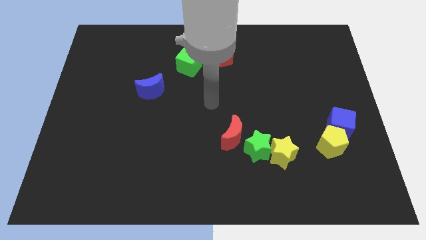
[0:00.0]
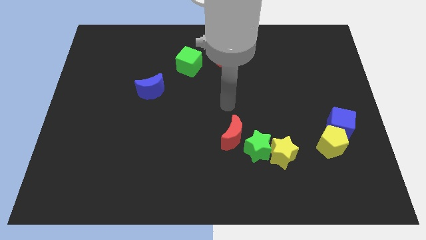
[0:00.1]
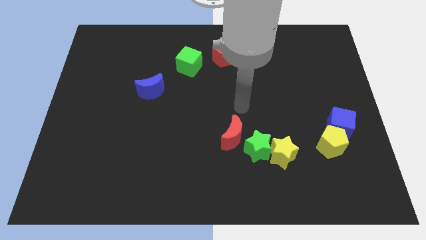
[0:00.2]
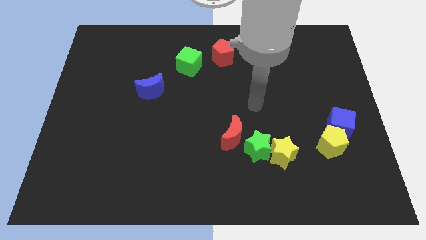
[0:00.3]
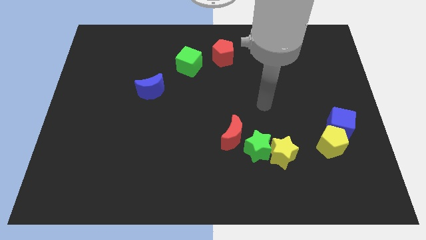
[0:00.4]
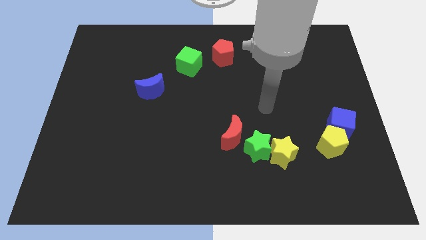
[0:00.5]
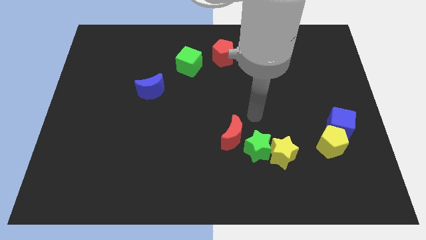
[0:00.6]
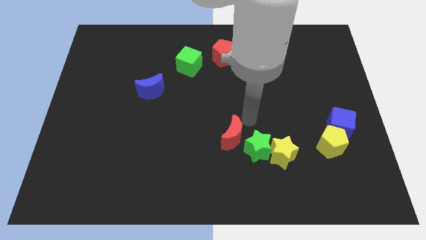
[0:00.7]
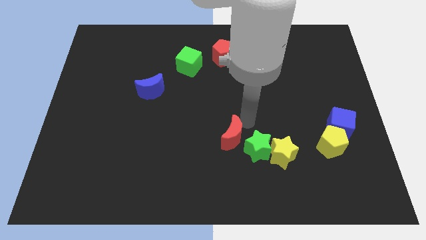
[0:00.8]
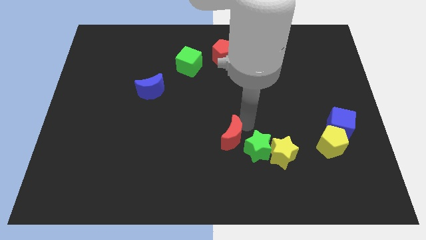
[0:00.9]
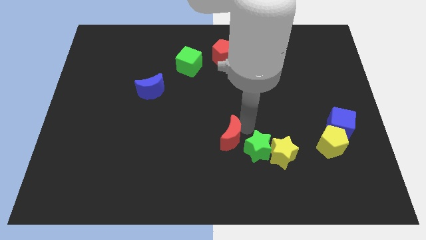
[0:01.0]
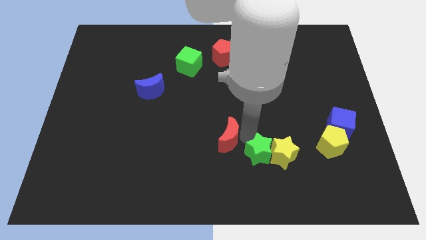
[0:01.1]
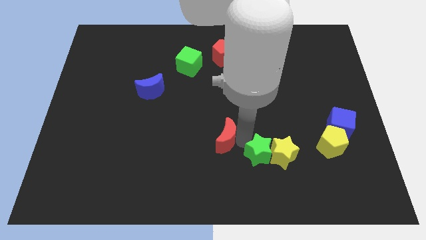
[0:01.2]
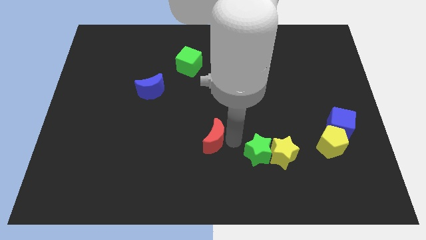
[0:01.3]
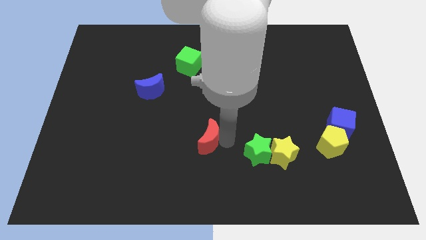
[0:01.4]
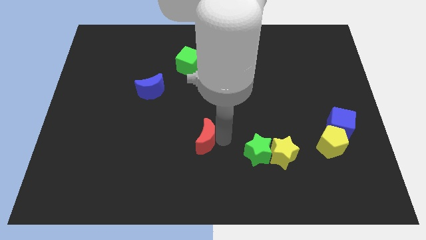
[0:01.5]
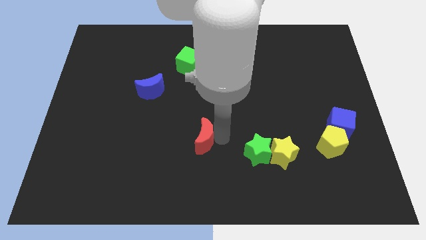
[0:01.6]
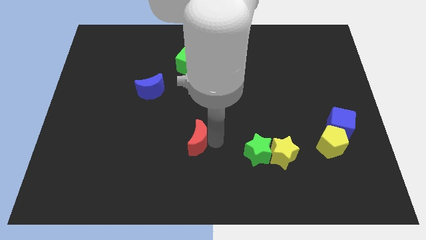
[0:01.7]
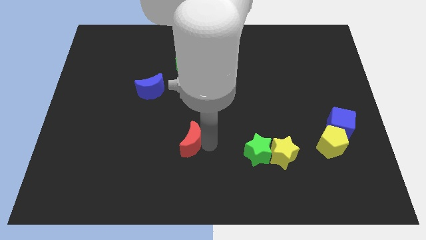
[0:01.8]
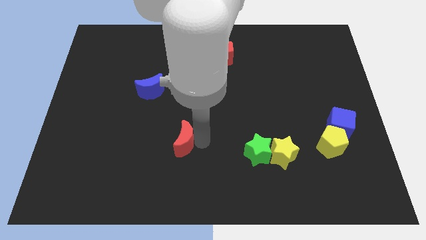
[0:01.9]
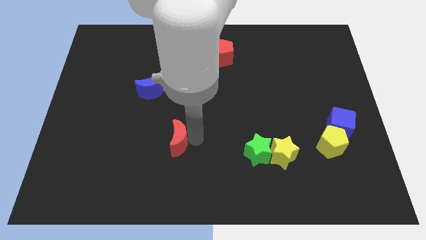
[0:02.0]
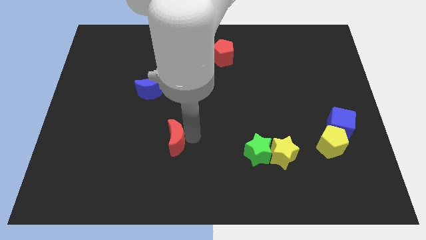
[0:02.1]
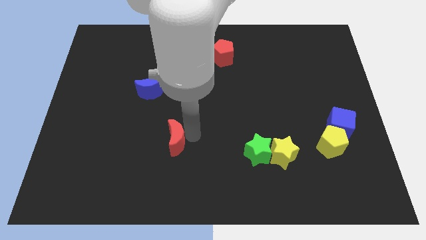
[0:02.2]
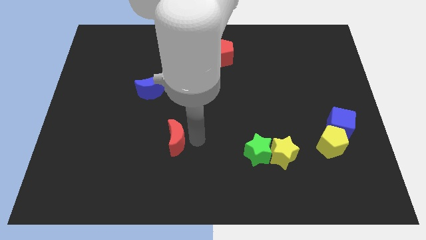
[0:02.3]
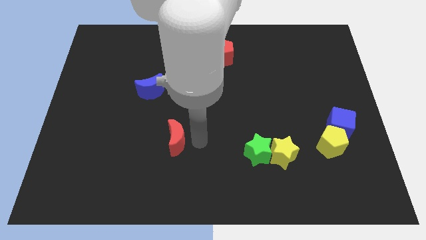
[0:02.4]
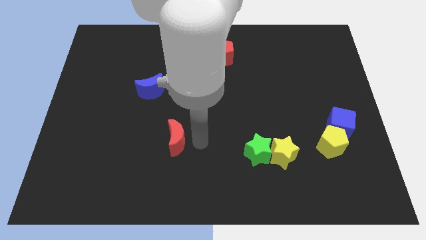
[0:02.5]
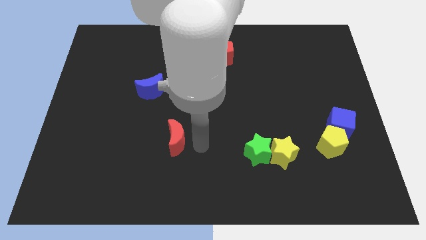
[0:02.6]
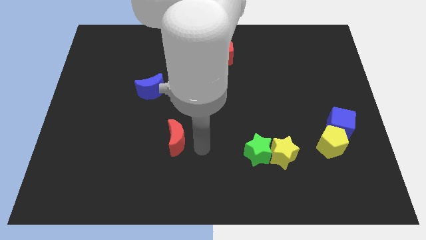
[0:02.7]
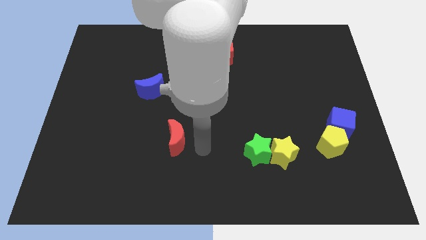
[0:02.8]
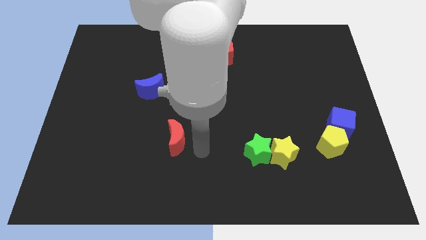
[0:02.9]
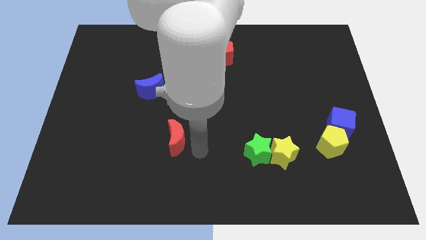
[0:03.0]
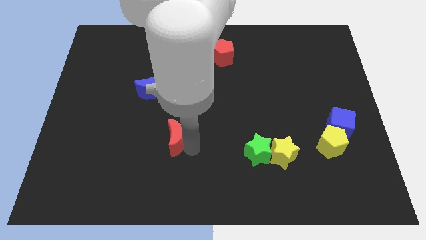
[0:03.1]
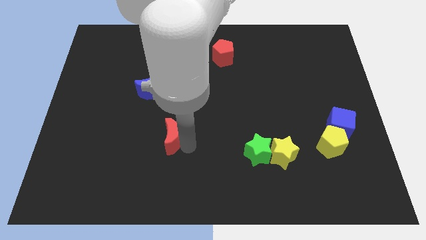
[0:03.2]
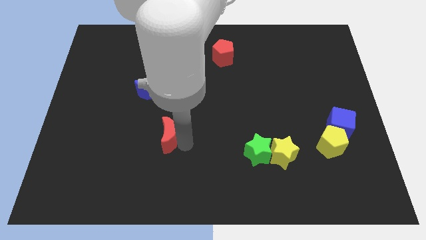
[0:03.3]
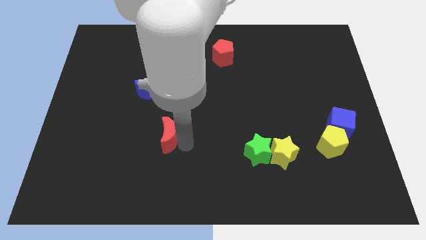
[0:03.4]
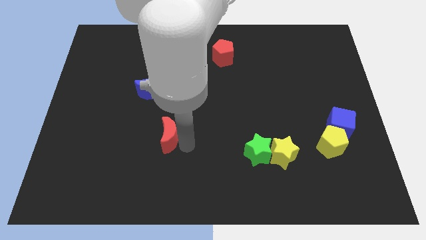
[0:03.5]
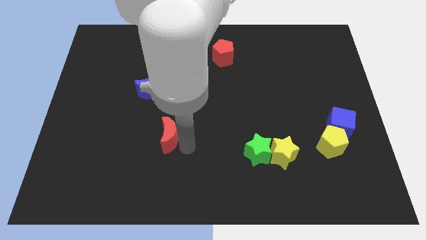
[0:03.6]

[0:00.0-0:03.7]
move the red moon towards left side of the board

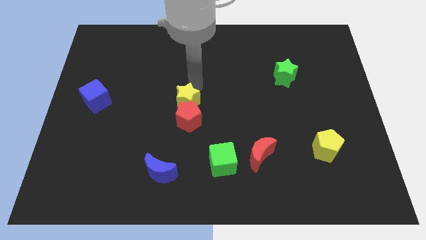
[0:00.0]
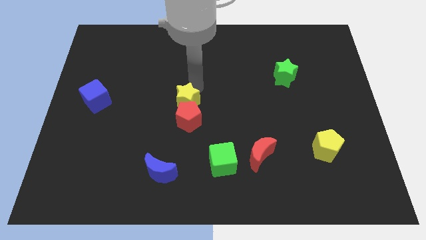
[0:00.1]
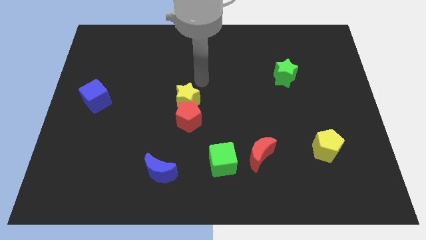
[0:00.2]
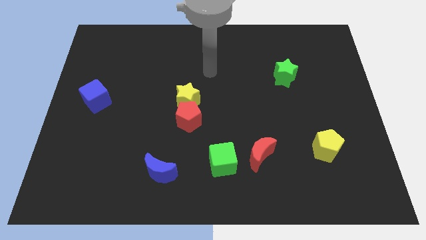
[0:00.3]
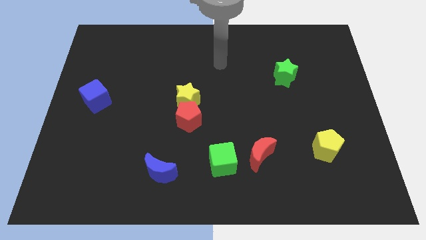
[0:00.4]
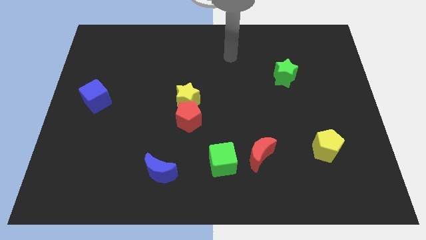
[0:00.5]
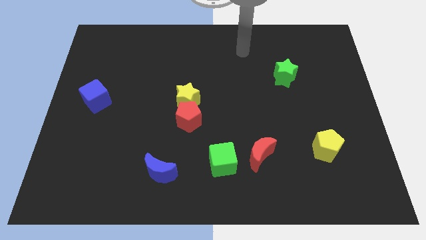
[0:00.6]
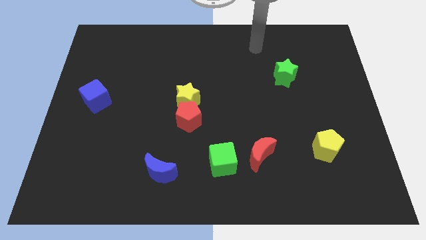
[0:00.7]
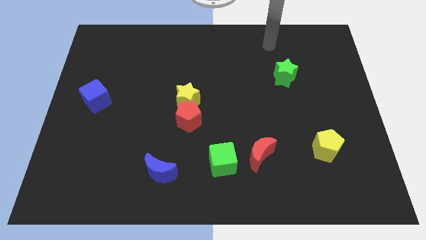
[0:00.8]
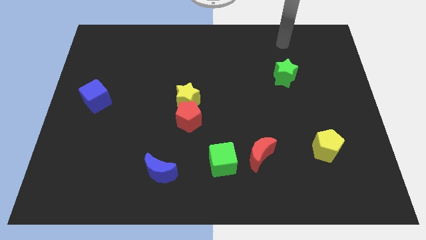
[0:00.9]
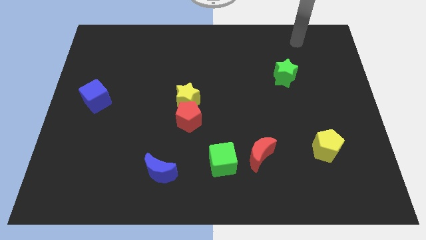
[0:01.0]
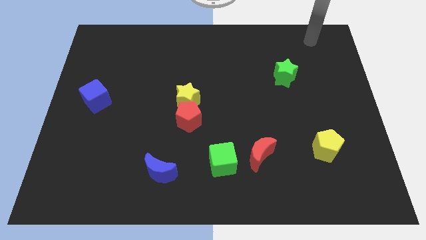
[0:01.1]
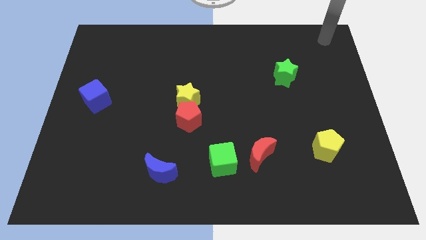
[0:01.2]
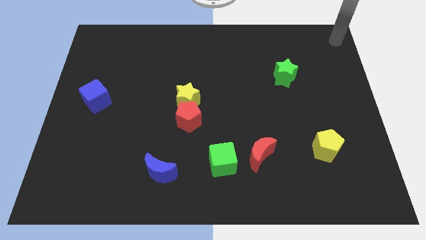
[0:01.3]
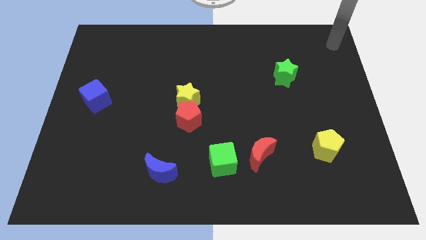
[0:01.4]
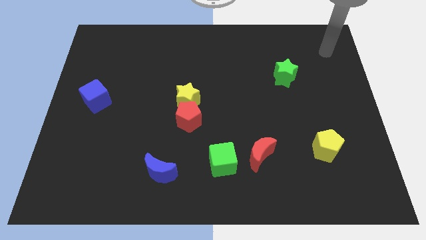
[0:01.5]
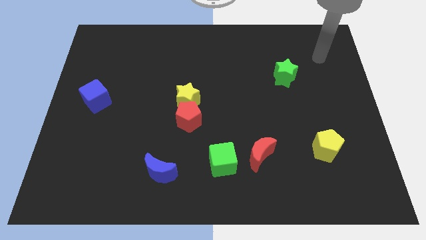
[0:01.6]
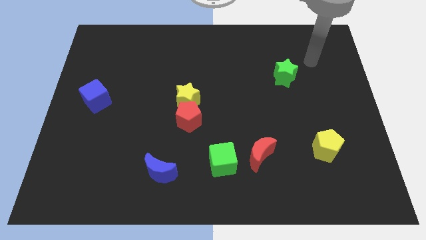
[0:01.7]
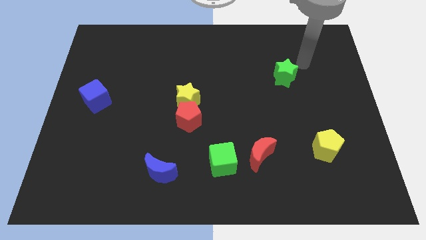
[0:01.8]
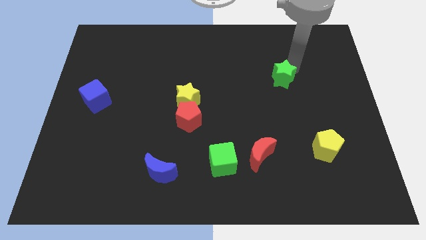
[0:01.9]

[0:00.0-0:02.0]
move your arm towards the green star

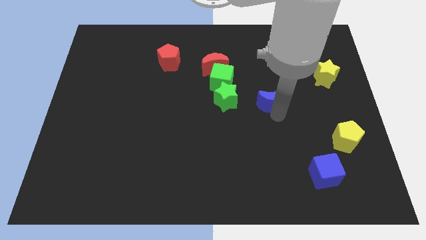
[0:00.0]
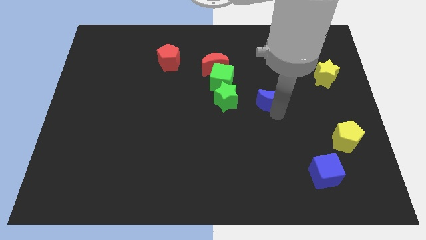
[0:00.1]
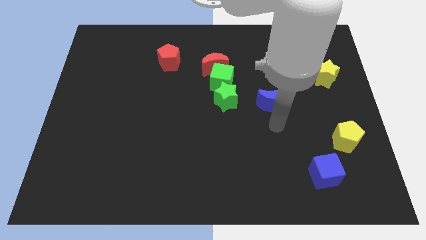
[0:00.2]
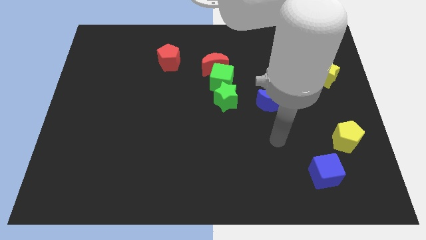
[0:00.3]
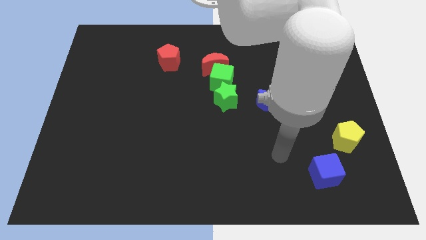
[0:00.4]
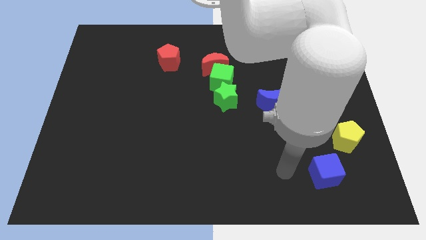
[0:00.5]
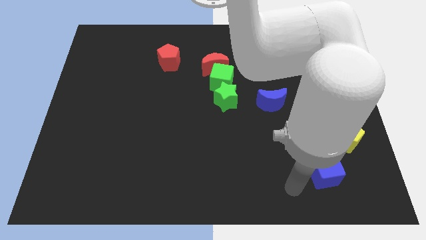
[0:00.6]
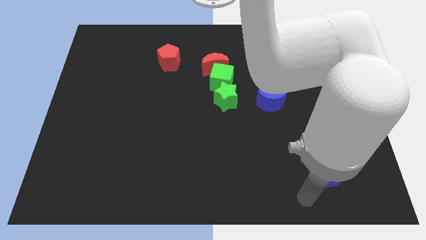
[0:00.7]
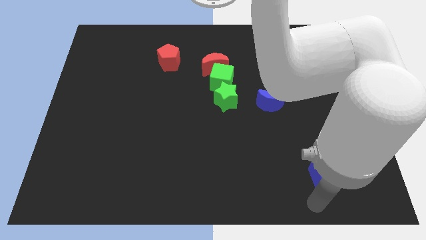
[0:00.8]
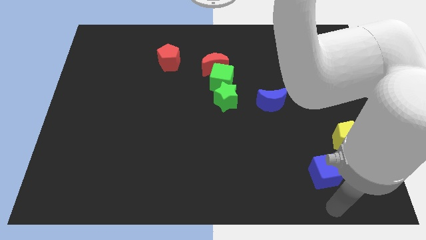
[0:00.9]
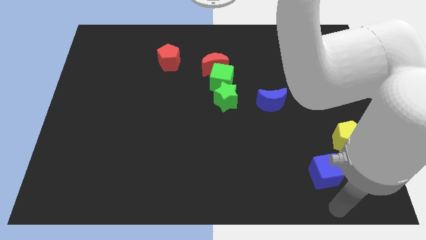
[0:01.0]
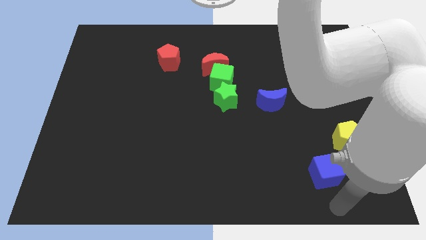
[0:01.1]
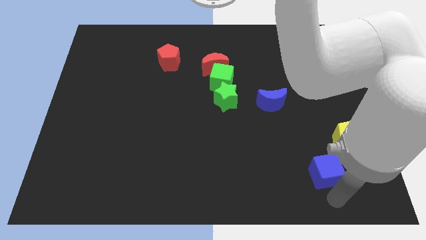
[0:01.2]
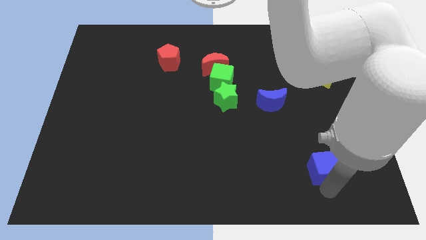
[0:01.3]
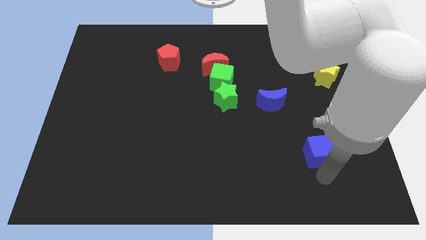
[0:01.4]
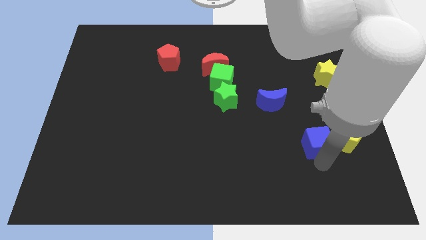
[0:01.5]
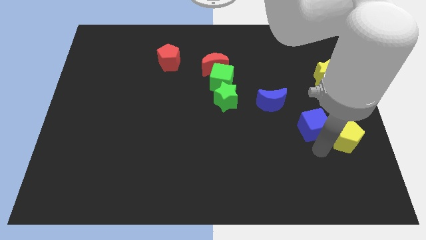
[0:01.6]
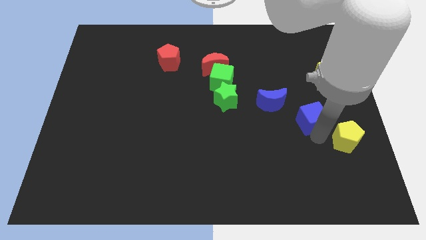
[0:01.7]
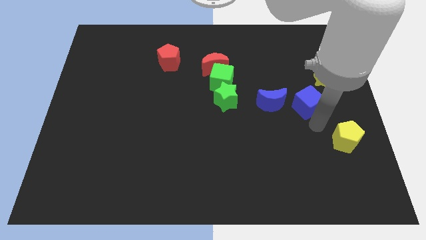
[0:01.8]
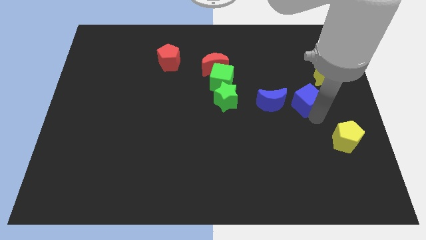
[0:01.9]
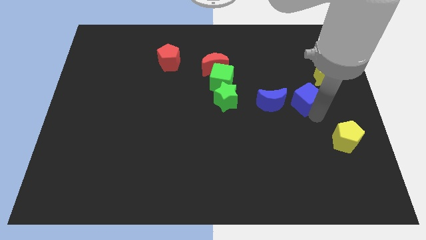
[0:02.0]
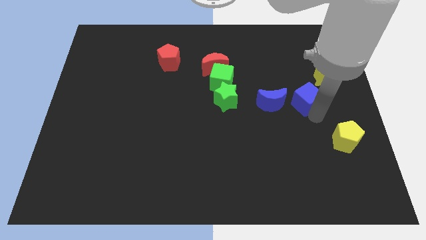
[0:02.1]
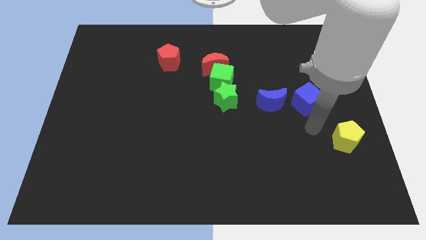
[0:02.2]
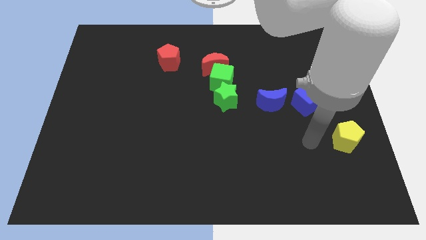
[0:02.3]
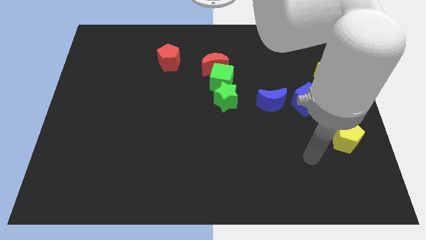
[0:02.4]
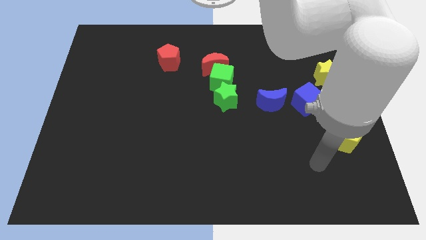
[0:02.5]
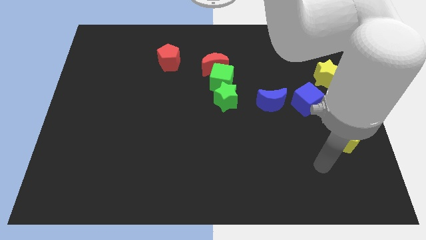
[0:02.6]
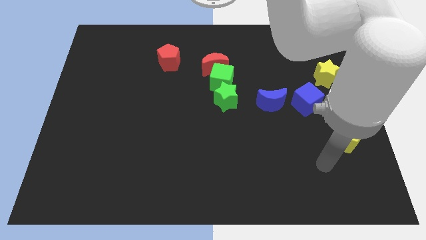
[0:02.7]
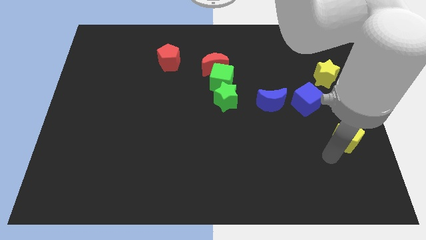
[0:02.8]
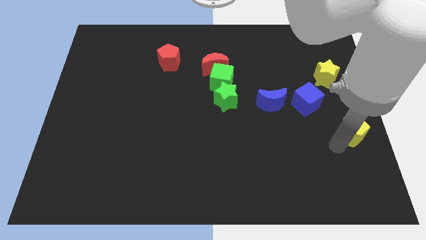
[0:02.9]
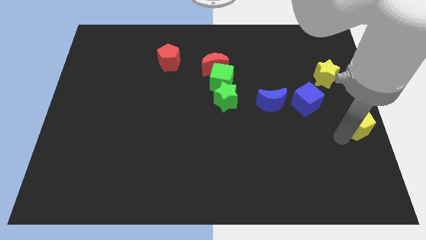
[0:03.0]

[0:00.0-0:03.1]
push the blue cube to the right of the blue moon

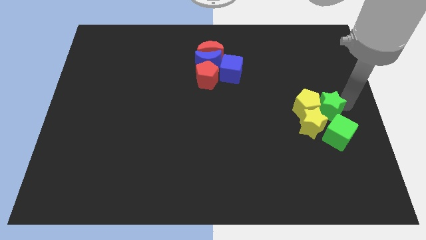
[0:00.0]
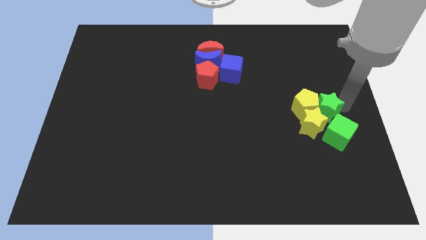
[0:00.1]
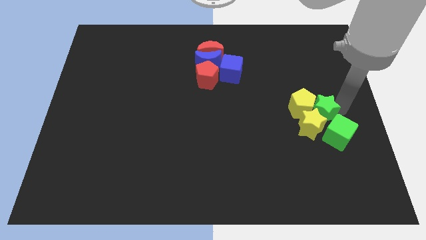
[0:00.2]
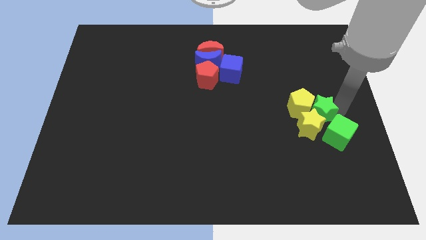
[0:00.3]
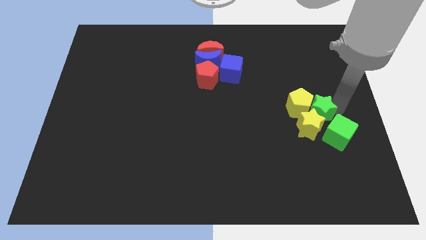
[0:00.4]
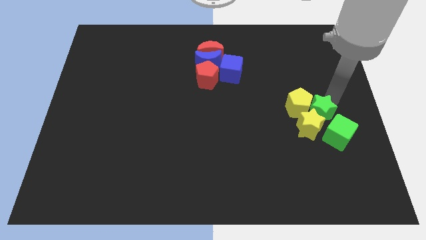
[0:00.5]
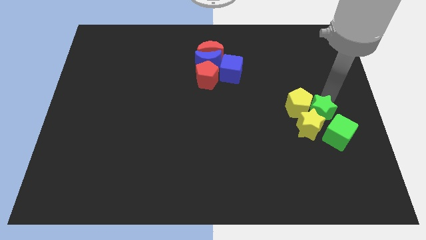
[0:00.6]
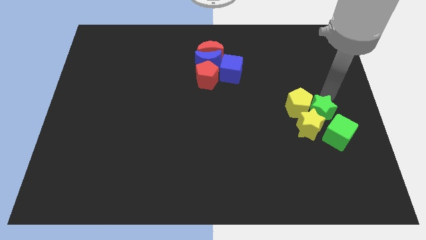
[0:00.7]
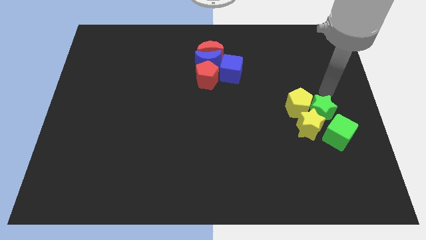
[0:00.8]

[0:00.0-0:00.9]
move the green star into the yellow pentagon and
